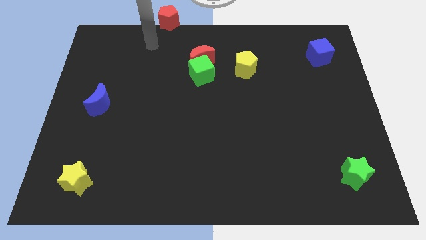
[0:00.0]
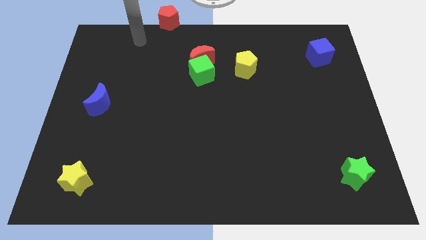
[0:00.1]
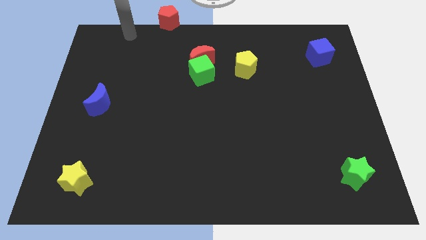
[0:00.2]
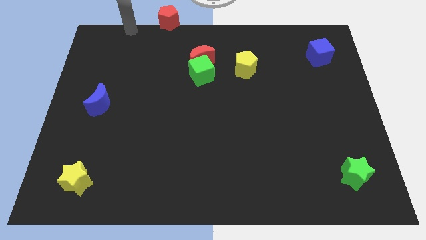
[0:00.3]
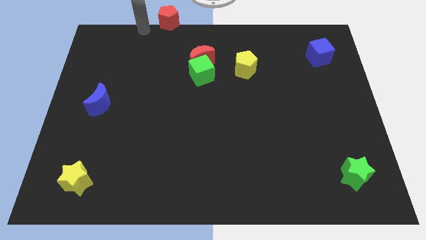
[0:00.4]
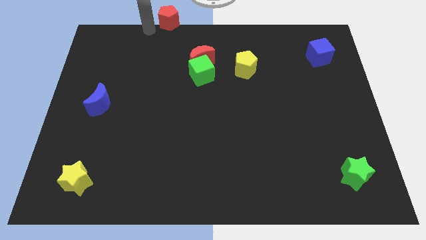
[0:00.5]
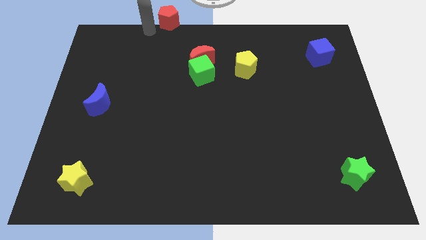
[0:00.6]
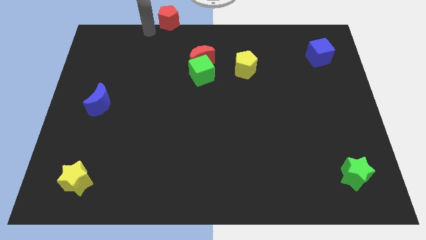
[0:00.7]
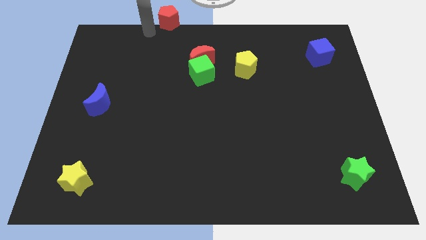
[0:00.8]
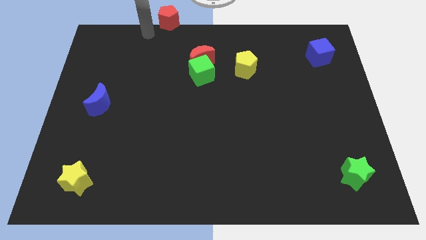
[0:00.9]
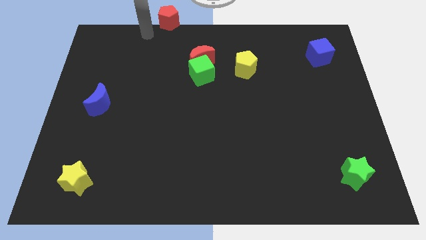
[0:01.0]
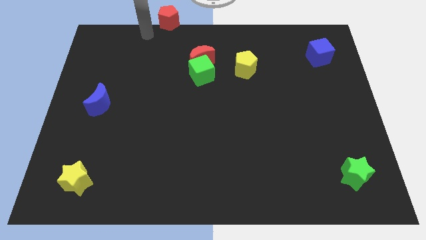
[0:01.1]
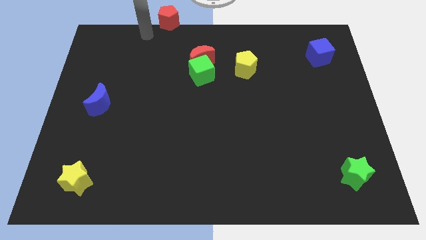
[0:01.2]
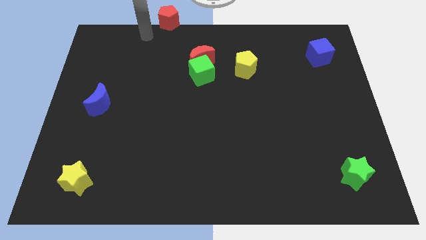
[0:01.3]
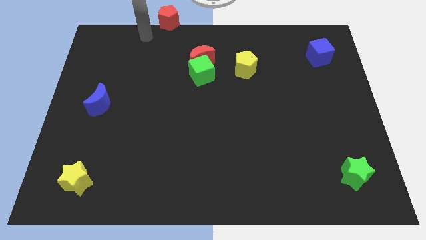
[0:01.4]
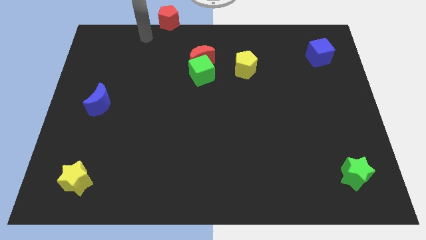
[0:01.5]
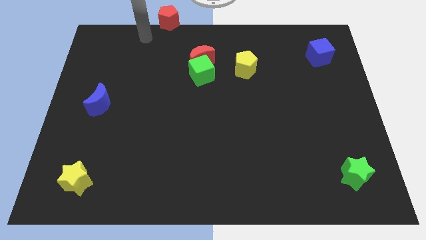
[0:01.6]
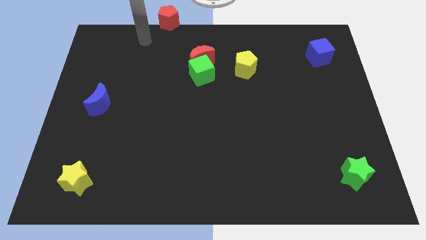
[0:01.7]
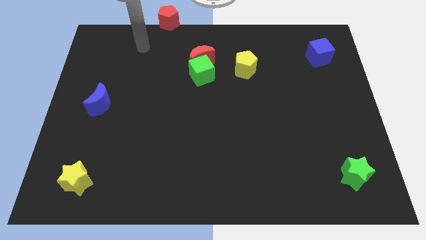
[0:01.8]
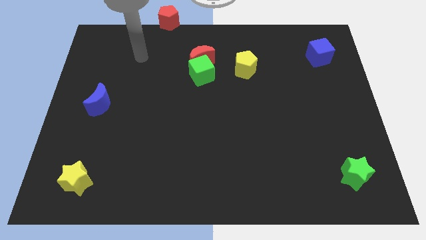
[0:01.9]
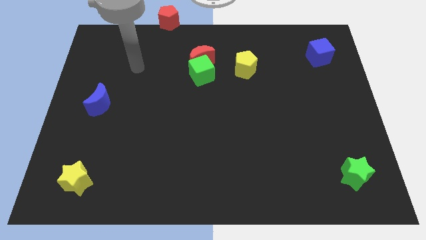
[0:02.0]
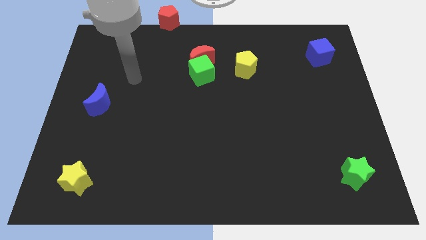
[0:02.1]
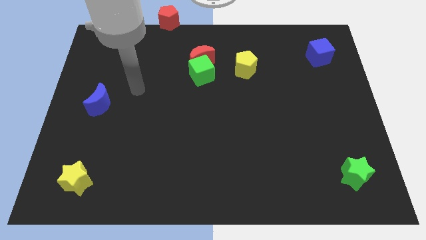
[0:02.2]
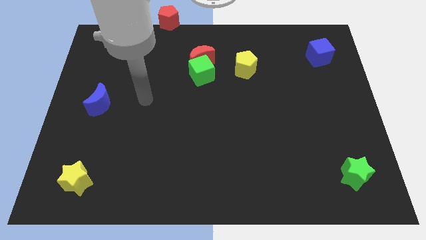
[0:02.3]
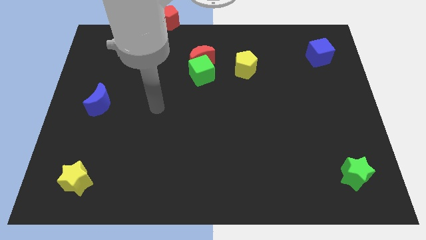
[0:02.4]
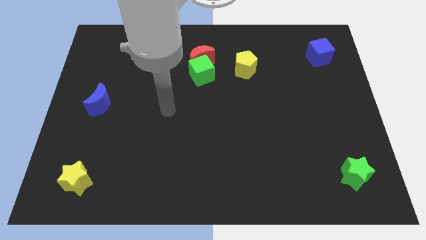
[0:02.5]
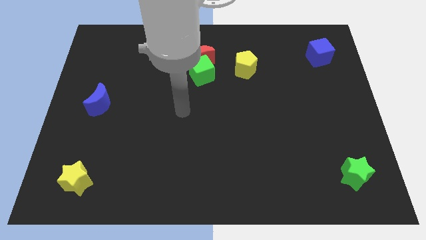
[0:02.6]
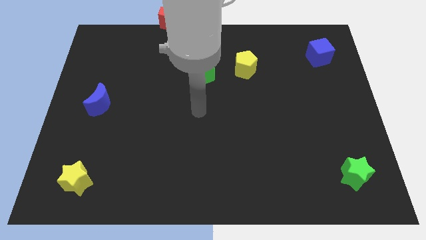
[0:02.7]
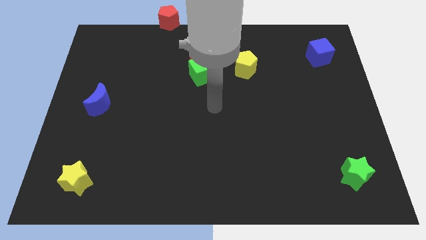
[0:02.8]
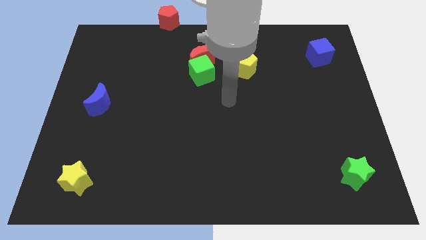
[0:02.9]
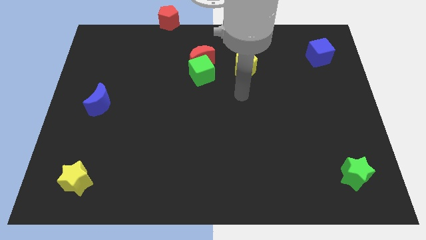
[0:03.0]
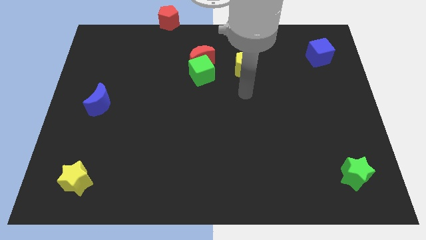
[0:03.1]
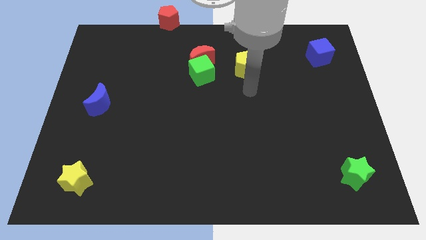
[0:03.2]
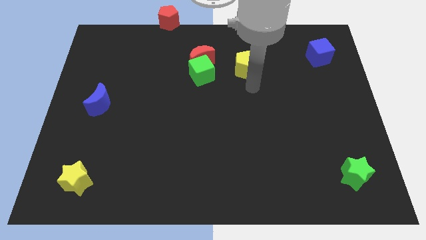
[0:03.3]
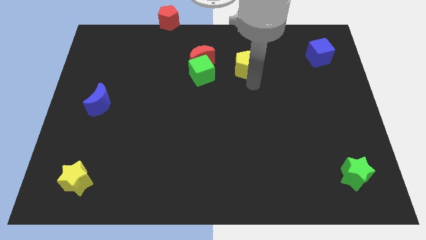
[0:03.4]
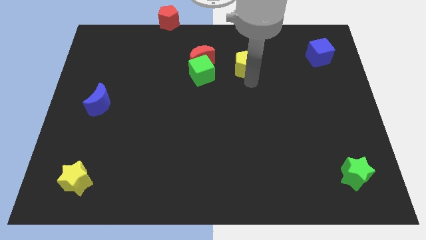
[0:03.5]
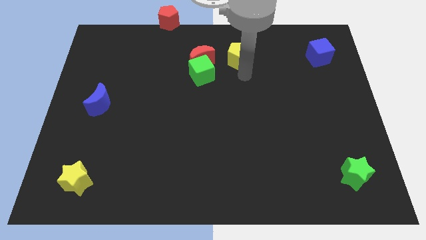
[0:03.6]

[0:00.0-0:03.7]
move your arm to the bottom of yellow pentagon

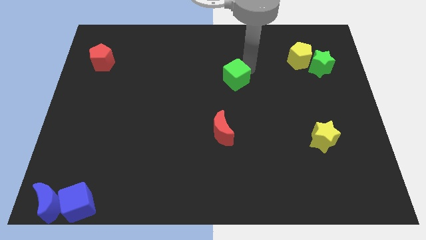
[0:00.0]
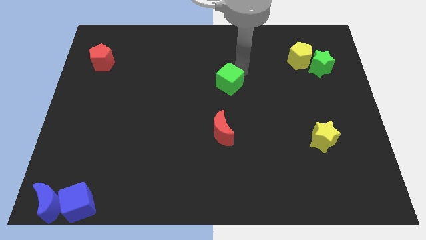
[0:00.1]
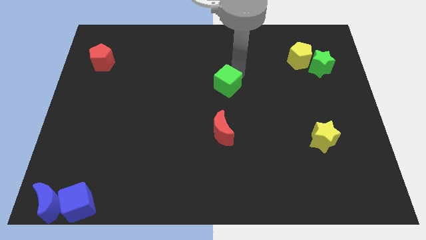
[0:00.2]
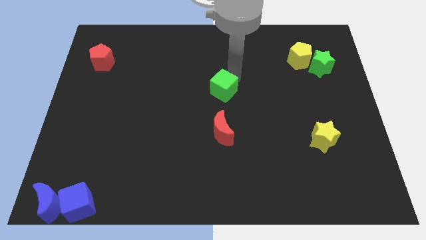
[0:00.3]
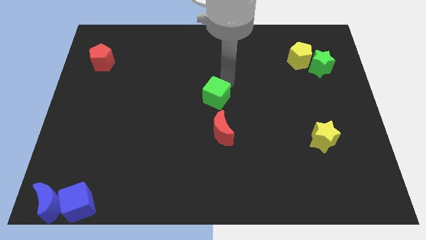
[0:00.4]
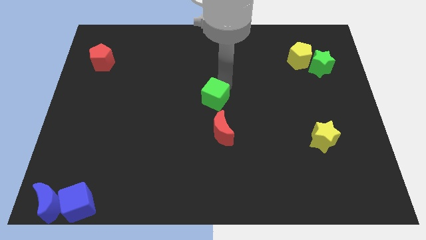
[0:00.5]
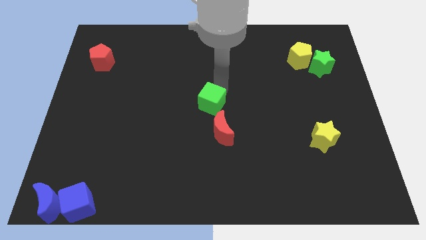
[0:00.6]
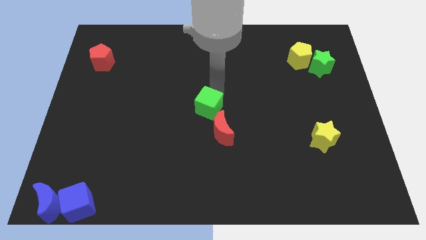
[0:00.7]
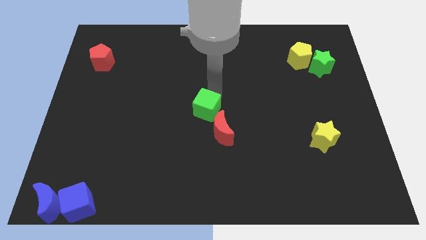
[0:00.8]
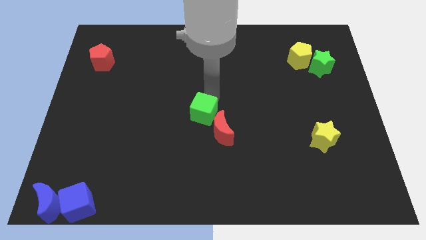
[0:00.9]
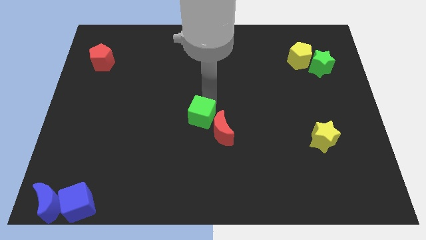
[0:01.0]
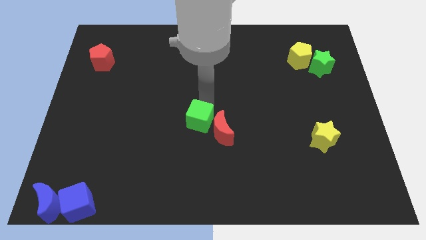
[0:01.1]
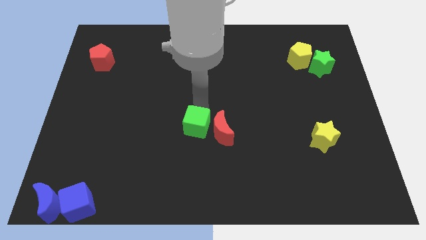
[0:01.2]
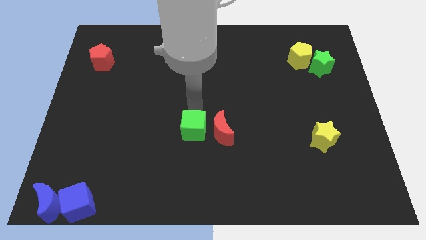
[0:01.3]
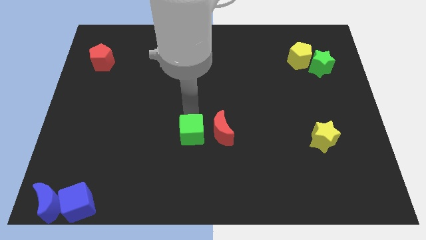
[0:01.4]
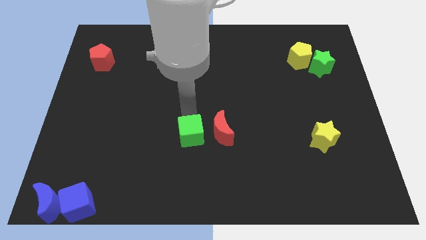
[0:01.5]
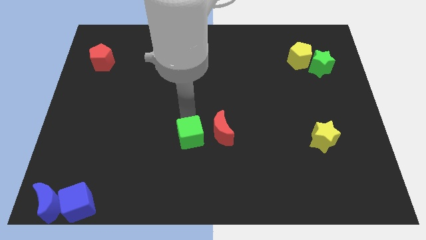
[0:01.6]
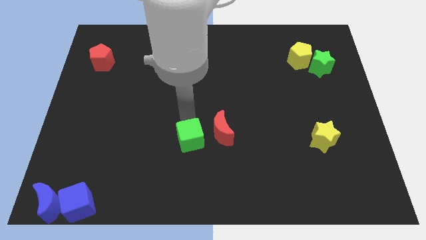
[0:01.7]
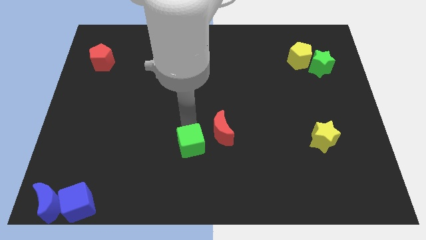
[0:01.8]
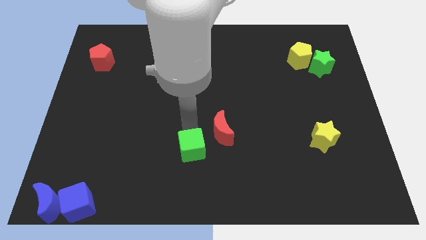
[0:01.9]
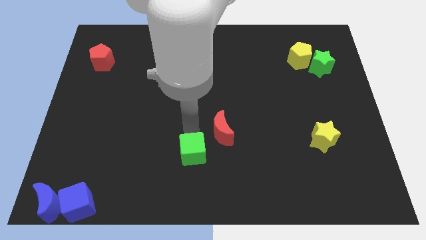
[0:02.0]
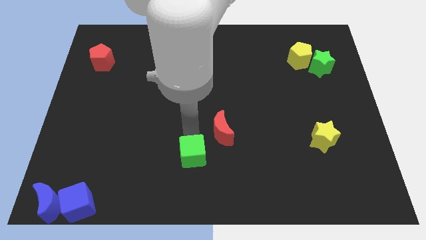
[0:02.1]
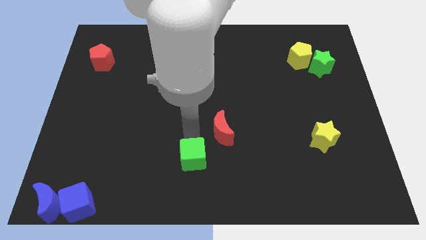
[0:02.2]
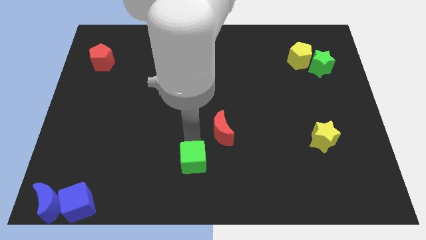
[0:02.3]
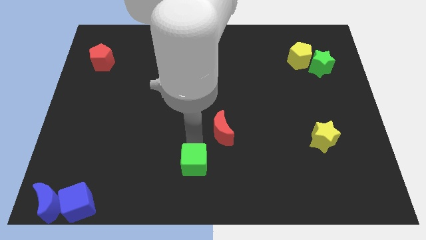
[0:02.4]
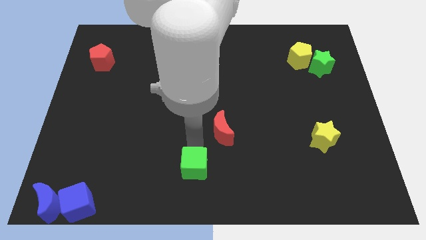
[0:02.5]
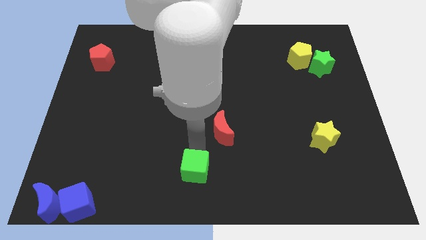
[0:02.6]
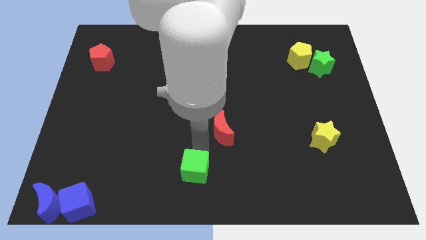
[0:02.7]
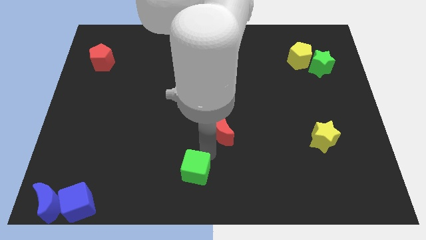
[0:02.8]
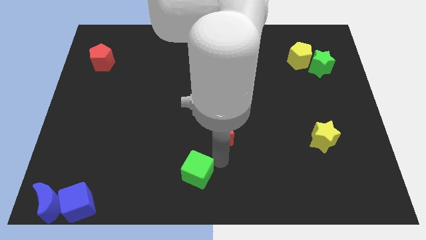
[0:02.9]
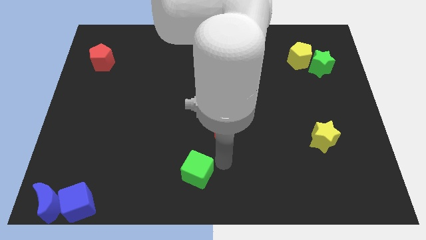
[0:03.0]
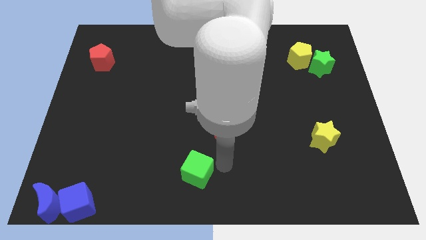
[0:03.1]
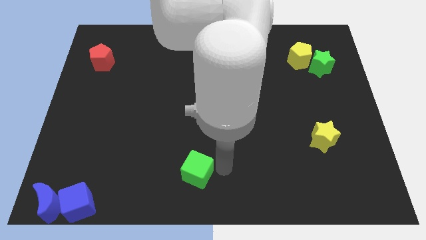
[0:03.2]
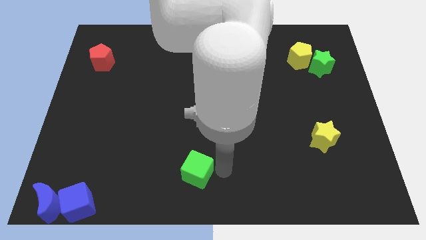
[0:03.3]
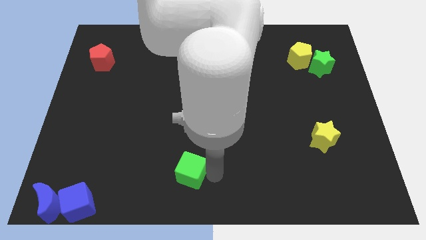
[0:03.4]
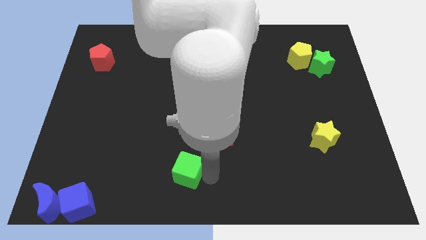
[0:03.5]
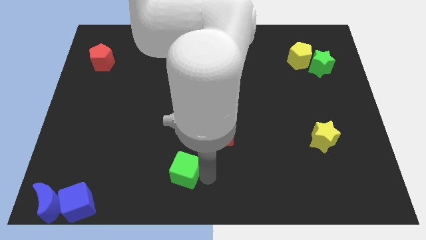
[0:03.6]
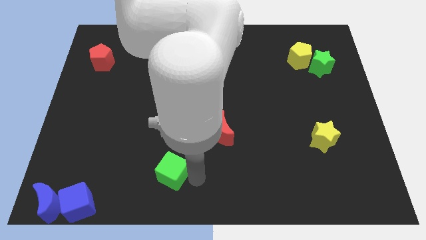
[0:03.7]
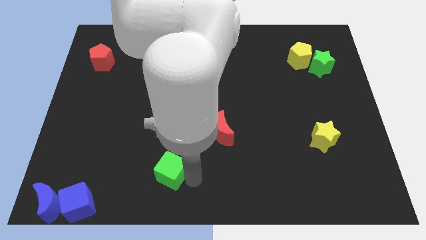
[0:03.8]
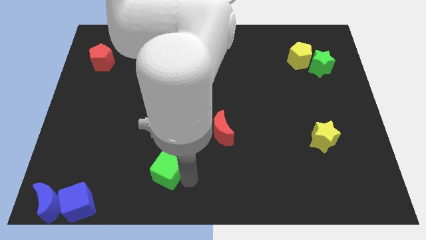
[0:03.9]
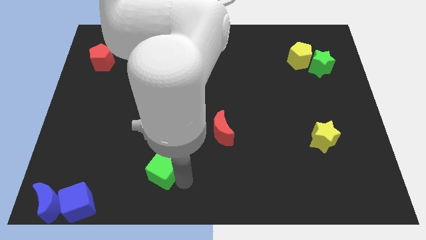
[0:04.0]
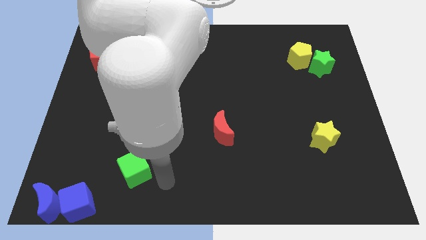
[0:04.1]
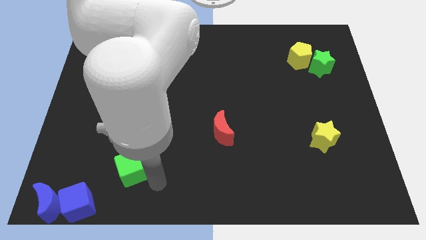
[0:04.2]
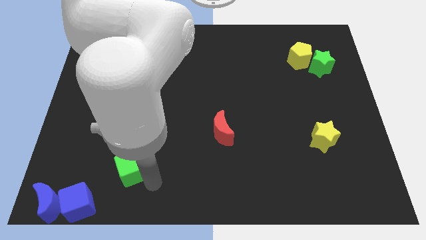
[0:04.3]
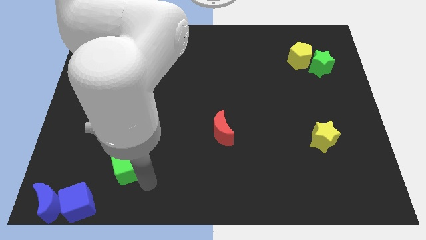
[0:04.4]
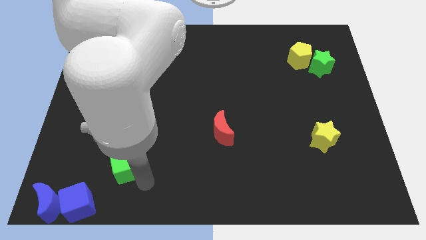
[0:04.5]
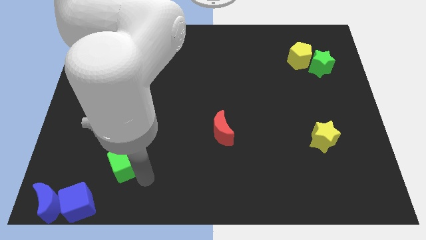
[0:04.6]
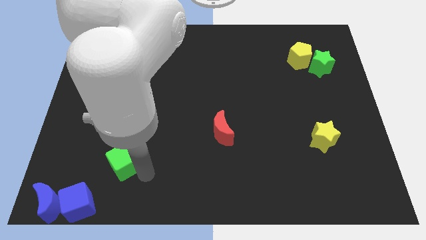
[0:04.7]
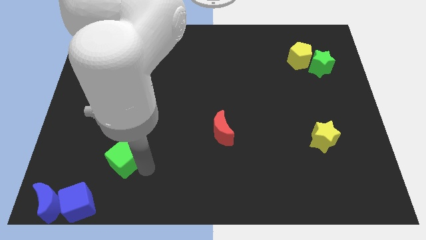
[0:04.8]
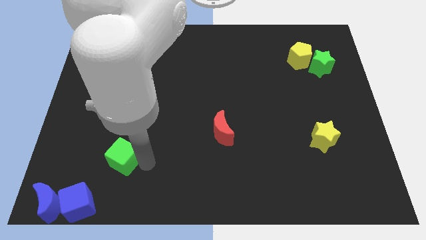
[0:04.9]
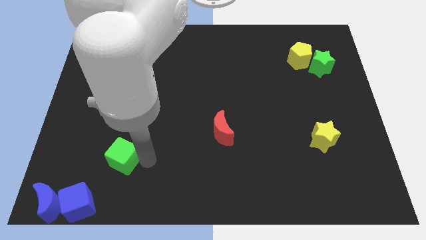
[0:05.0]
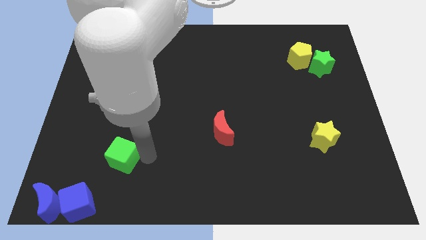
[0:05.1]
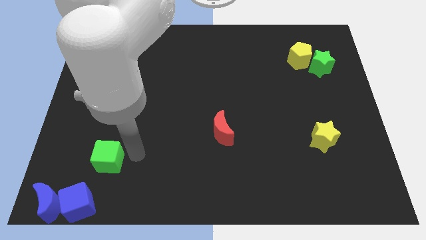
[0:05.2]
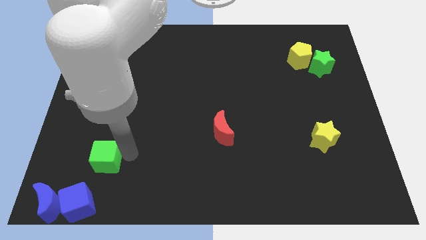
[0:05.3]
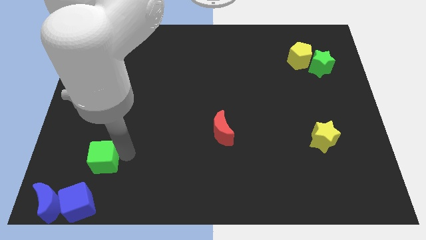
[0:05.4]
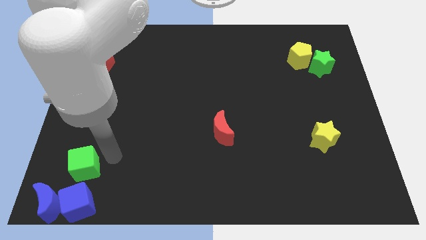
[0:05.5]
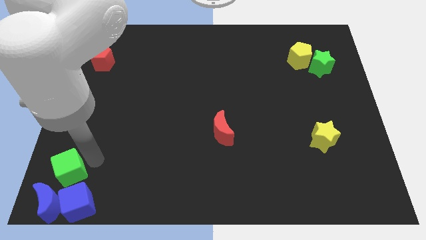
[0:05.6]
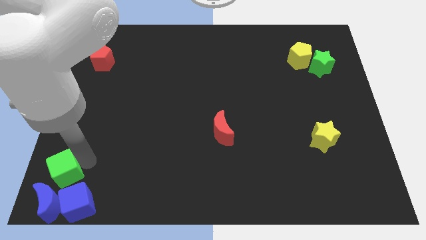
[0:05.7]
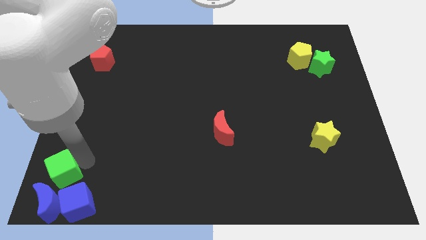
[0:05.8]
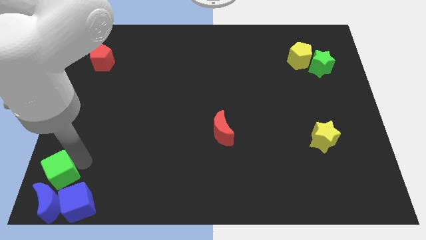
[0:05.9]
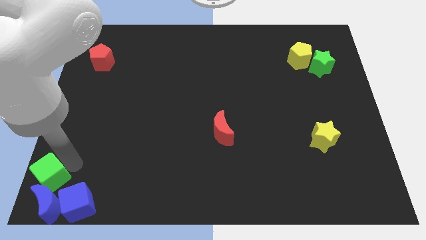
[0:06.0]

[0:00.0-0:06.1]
place greeen cube above the blue crescent
